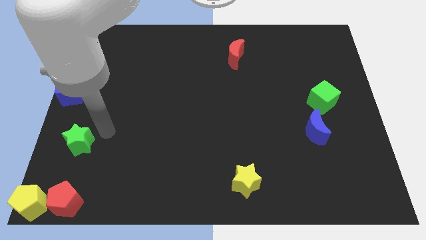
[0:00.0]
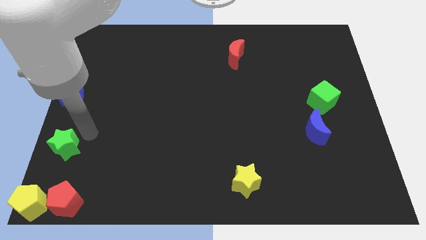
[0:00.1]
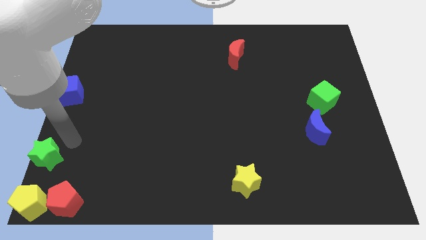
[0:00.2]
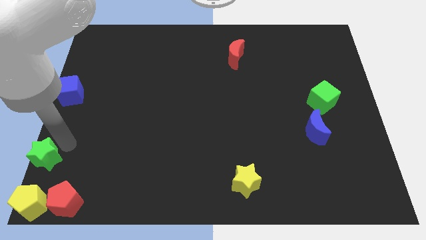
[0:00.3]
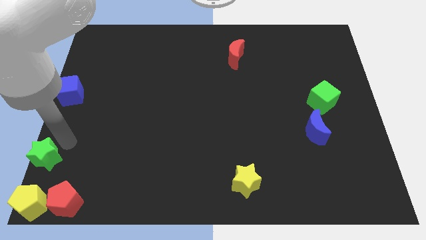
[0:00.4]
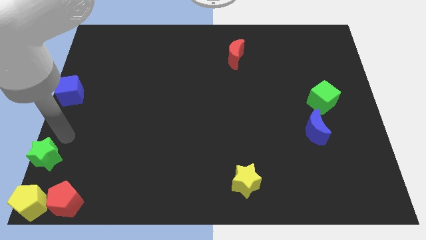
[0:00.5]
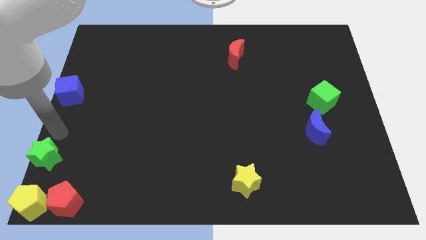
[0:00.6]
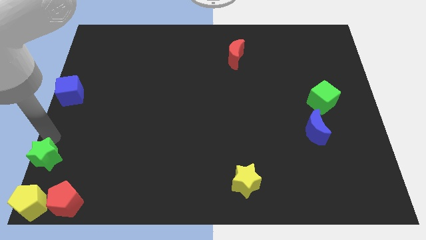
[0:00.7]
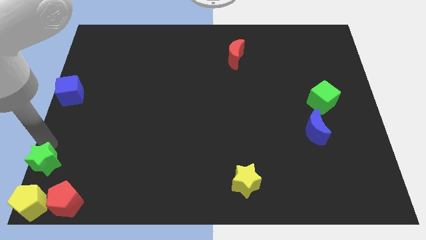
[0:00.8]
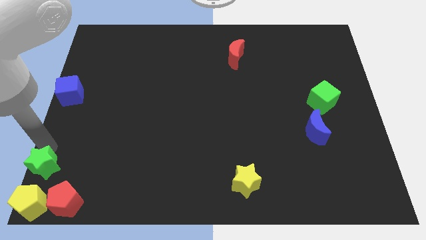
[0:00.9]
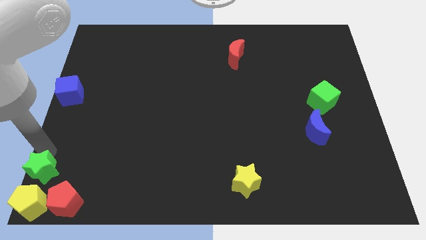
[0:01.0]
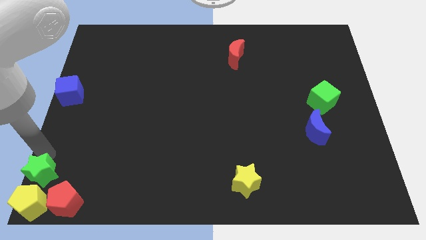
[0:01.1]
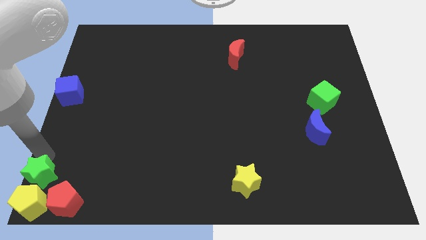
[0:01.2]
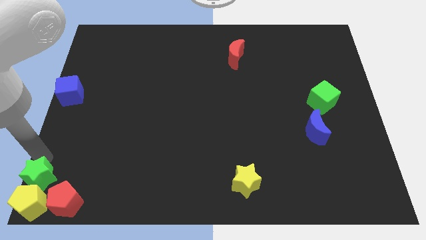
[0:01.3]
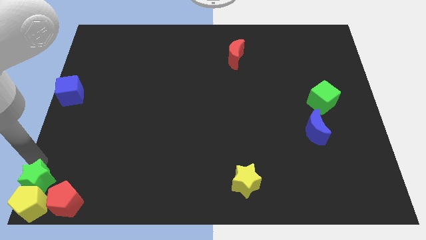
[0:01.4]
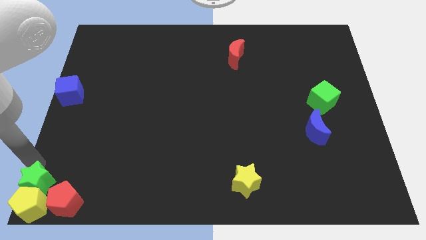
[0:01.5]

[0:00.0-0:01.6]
move the green star into the yellow pentagon

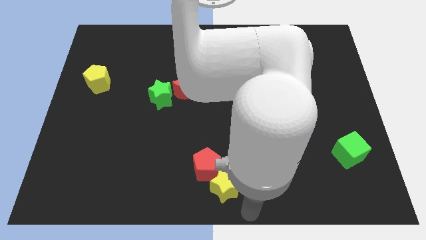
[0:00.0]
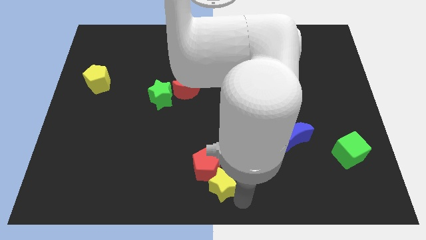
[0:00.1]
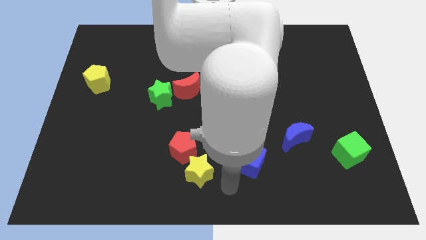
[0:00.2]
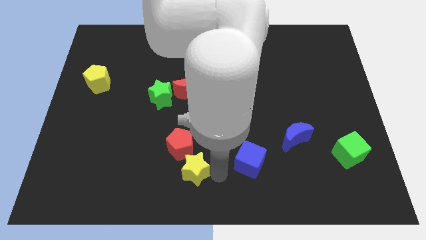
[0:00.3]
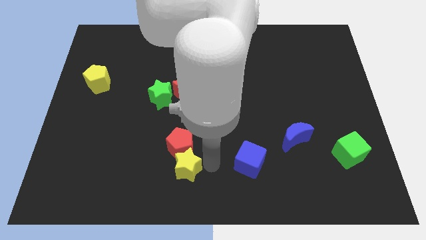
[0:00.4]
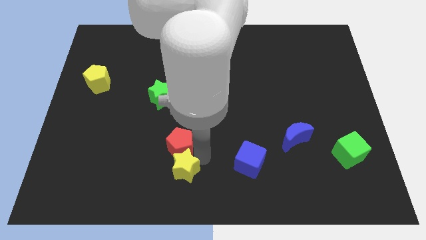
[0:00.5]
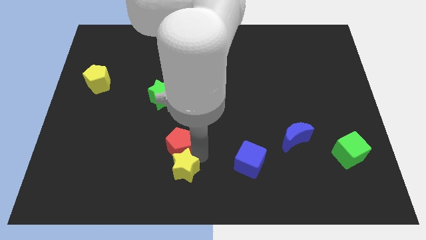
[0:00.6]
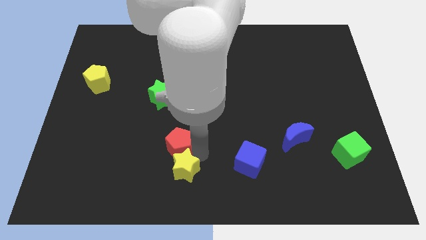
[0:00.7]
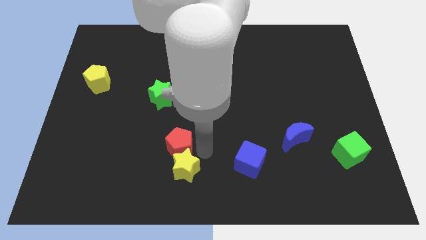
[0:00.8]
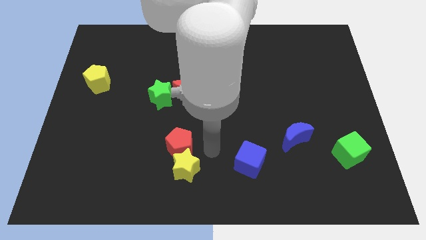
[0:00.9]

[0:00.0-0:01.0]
push the yellow star into the red pentagon

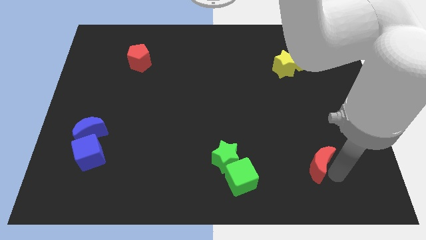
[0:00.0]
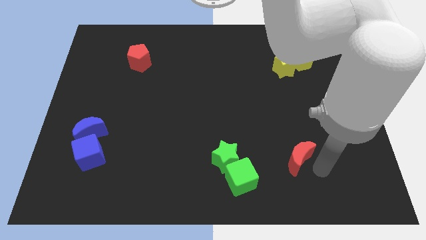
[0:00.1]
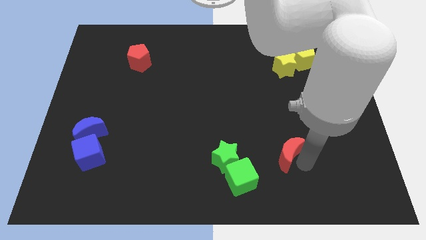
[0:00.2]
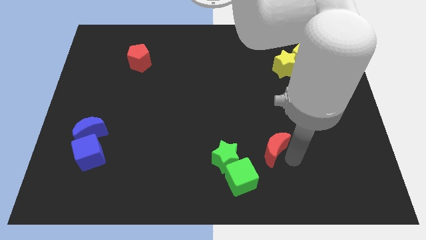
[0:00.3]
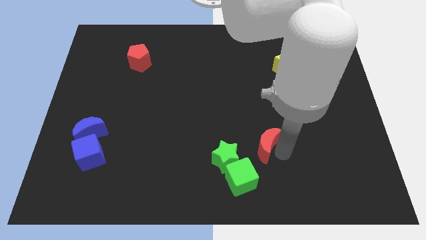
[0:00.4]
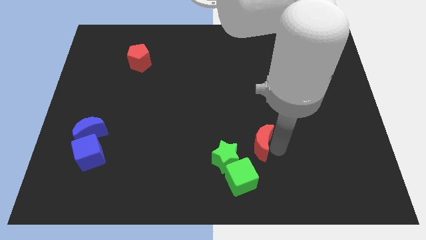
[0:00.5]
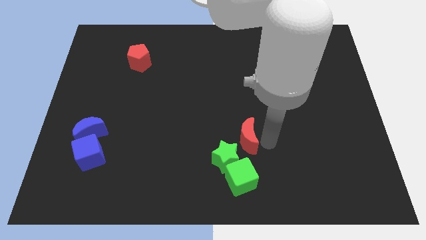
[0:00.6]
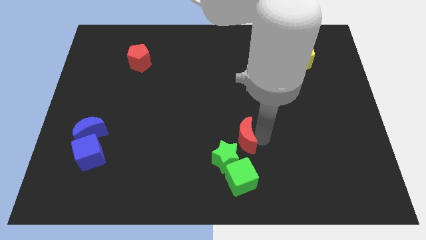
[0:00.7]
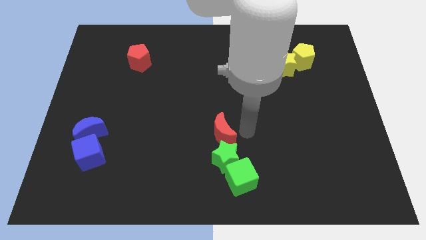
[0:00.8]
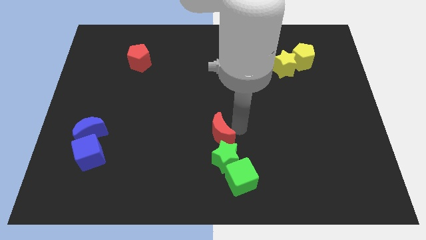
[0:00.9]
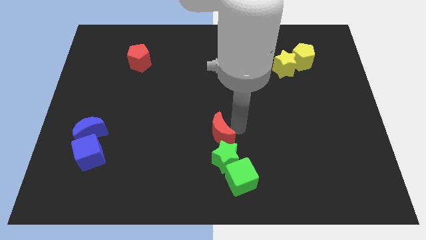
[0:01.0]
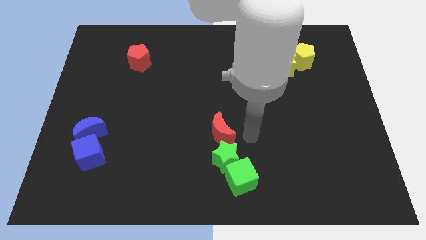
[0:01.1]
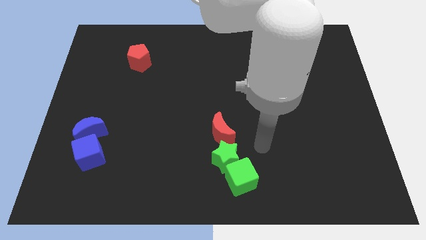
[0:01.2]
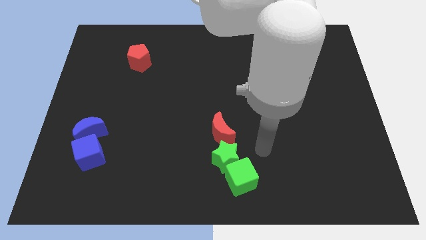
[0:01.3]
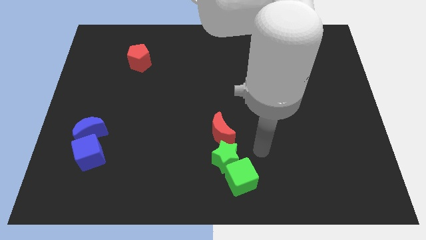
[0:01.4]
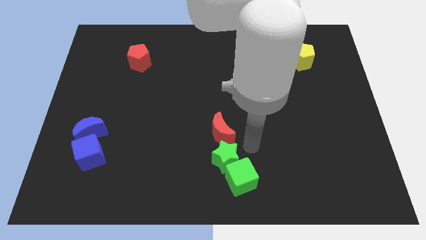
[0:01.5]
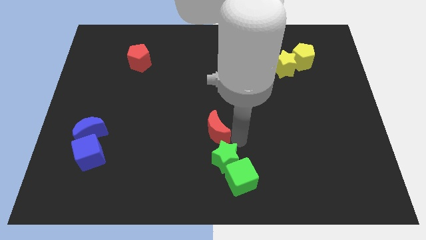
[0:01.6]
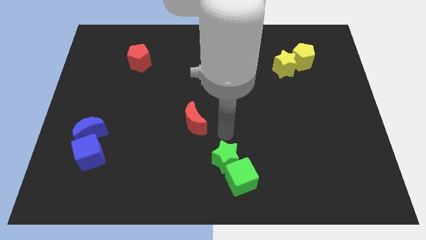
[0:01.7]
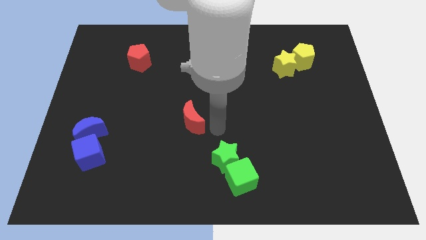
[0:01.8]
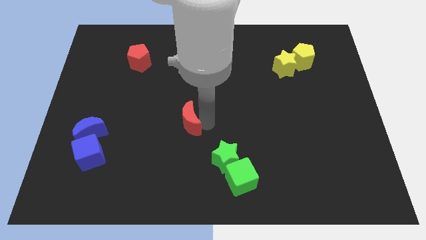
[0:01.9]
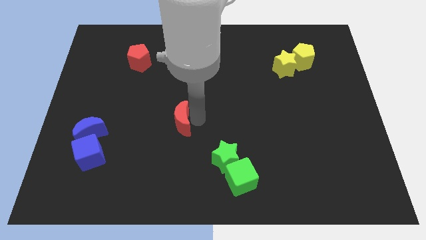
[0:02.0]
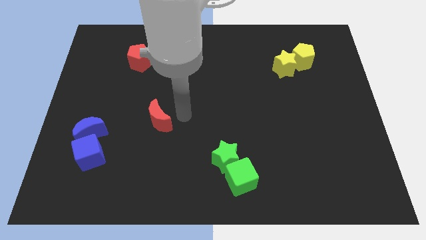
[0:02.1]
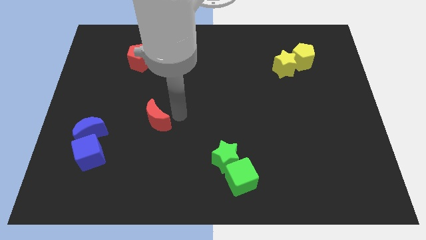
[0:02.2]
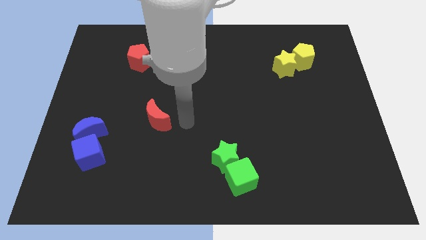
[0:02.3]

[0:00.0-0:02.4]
place the red crescent diagonal top right to the blue blocks

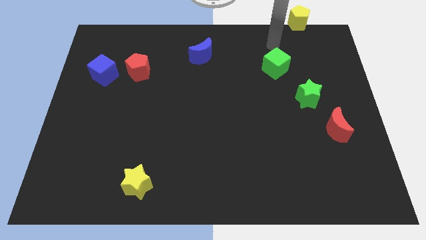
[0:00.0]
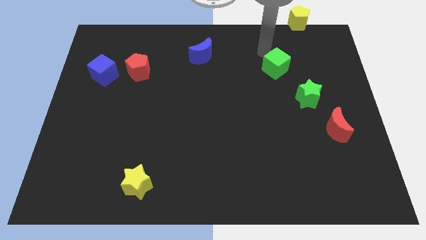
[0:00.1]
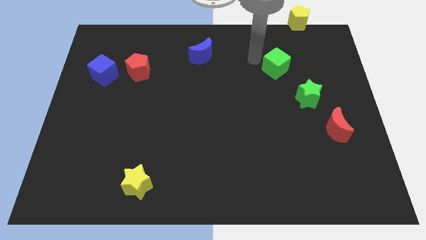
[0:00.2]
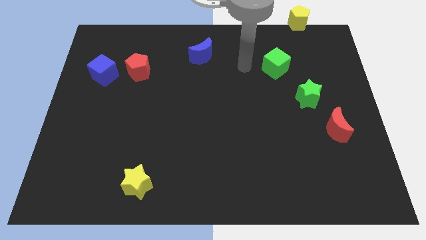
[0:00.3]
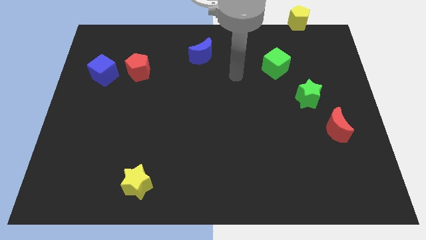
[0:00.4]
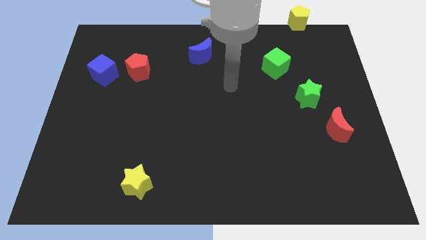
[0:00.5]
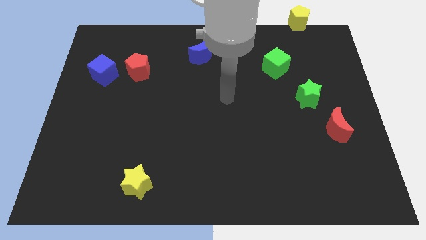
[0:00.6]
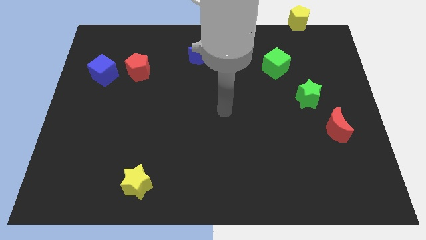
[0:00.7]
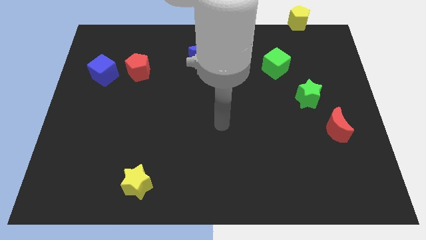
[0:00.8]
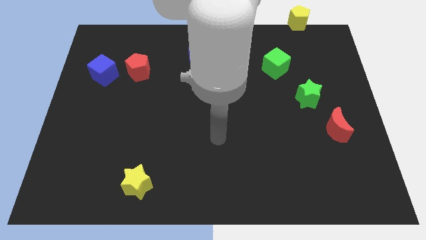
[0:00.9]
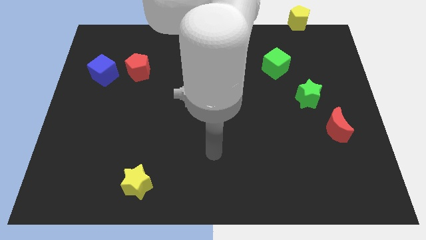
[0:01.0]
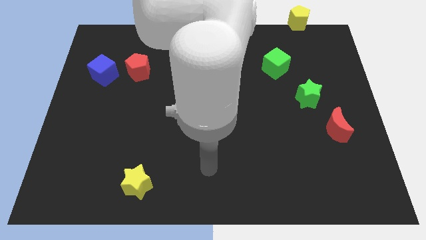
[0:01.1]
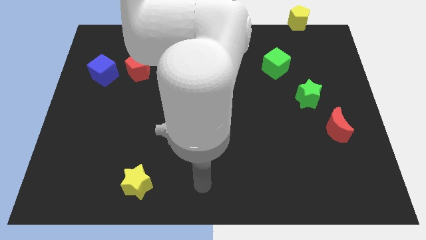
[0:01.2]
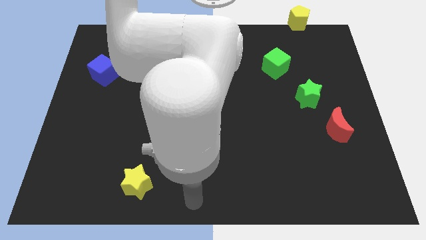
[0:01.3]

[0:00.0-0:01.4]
move your arm to the bottom center of the board

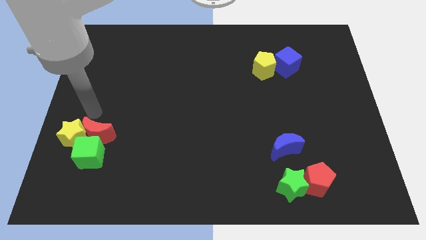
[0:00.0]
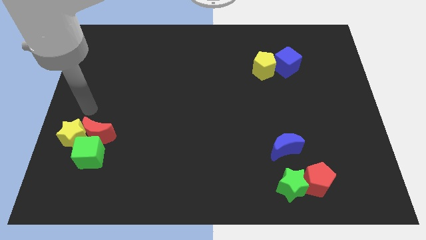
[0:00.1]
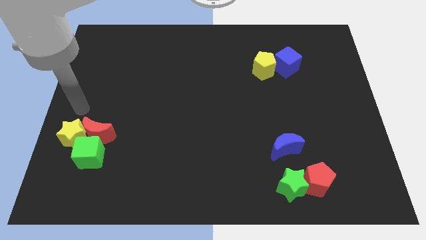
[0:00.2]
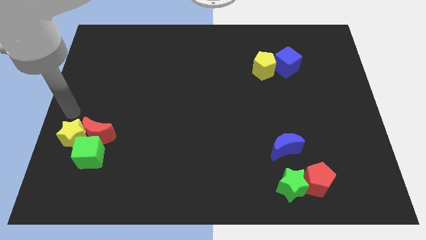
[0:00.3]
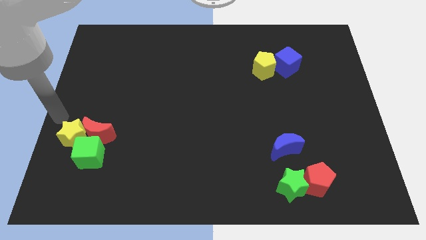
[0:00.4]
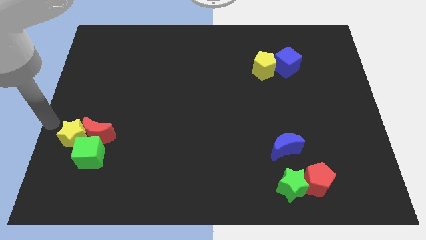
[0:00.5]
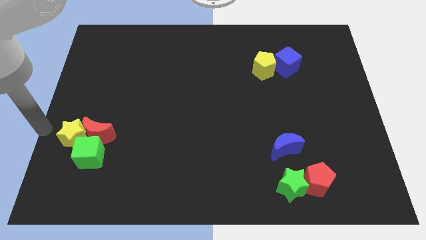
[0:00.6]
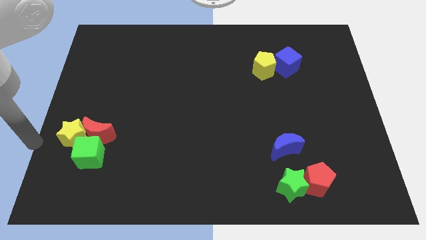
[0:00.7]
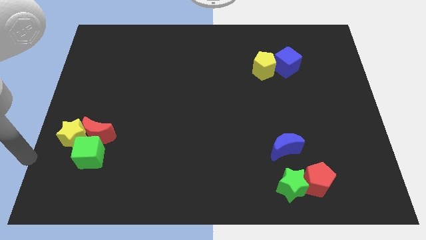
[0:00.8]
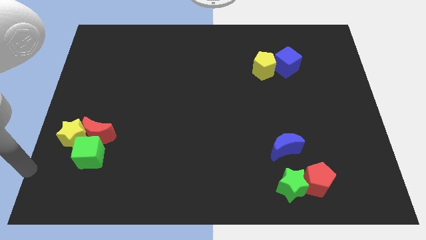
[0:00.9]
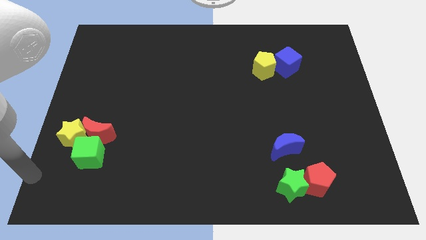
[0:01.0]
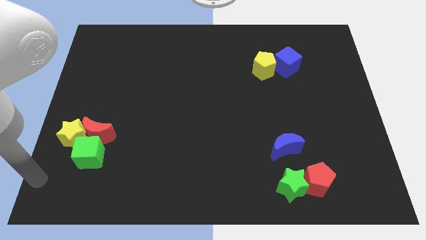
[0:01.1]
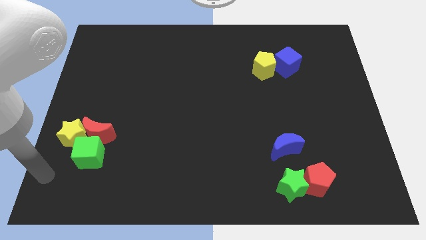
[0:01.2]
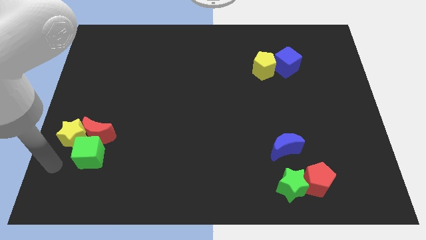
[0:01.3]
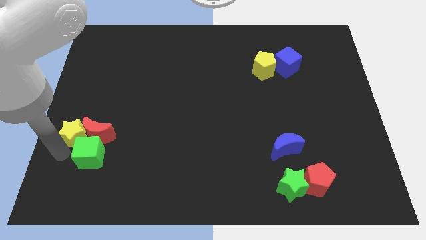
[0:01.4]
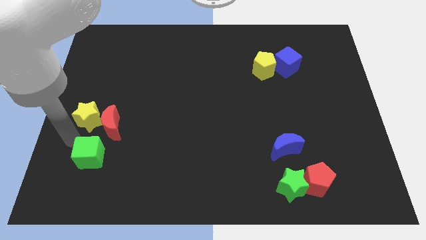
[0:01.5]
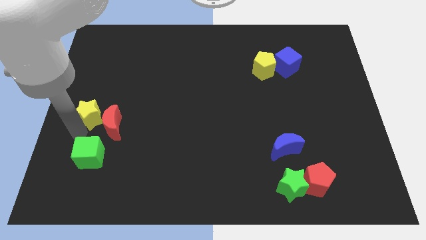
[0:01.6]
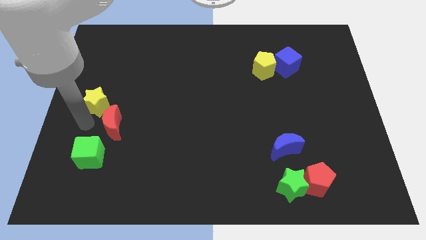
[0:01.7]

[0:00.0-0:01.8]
separate yellow star from the green and red blocks

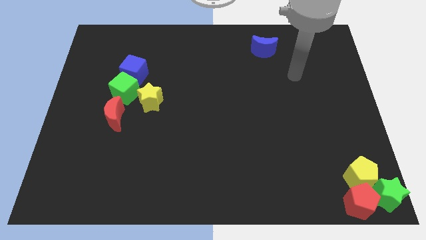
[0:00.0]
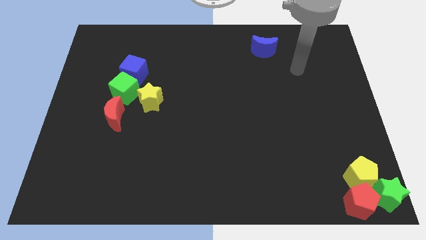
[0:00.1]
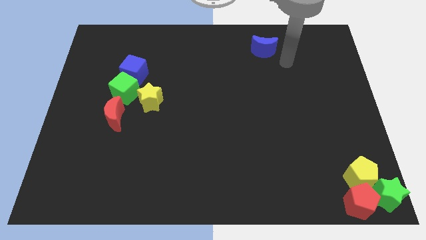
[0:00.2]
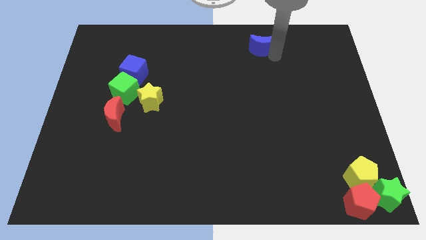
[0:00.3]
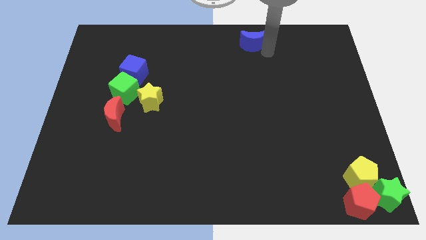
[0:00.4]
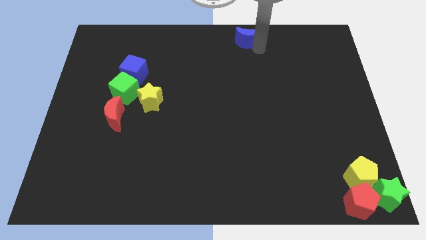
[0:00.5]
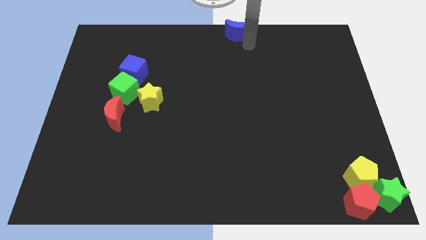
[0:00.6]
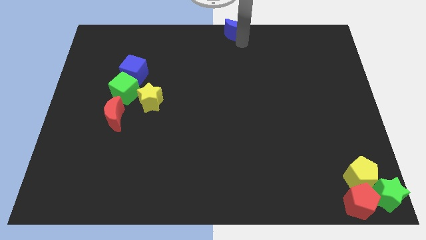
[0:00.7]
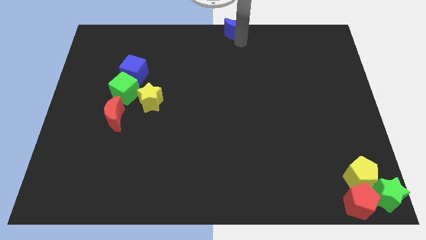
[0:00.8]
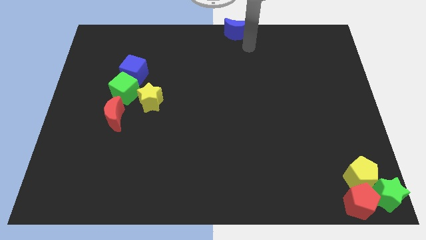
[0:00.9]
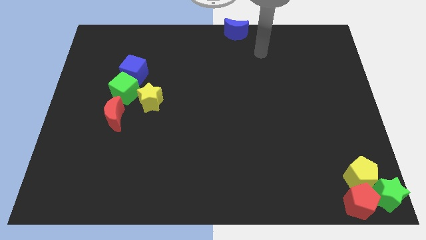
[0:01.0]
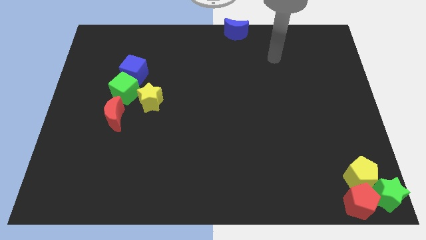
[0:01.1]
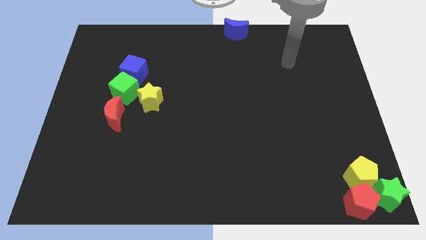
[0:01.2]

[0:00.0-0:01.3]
move the blue crescent to the top center of the board
